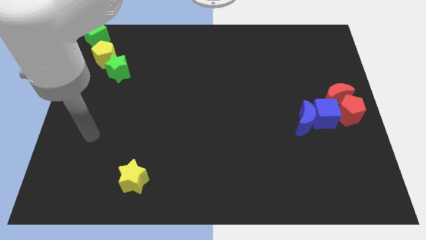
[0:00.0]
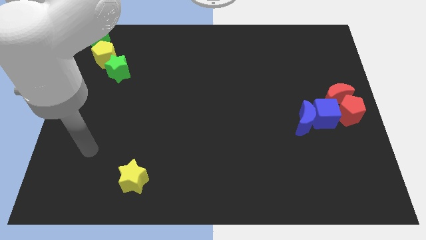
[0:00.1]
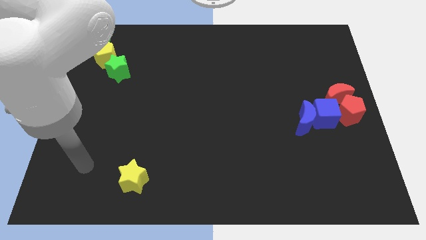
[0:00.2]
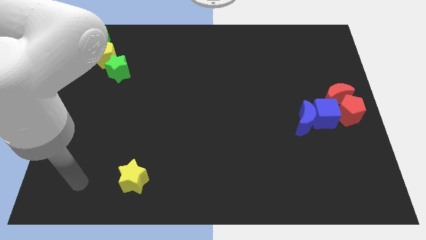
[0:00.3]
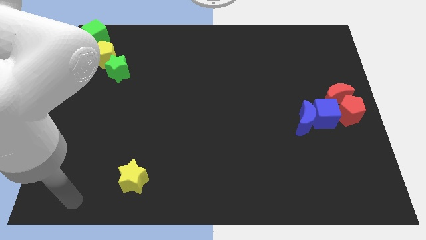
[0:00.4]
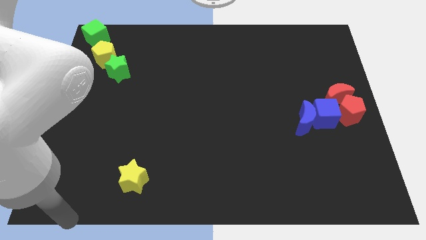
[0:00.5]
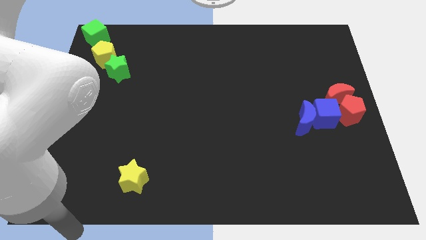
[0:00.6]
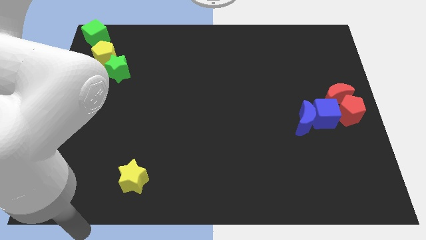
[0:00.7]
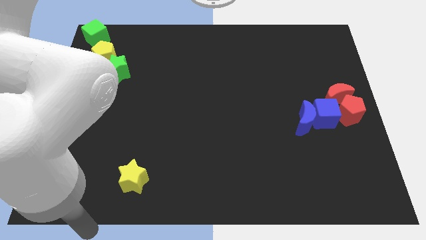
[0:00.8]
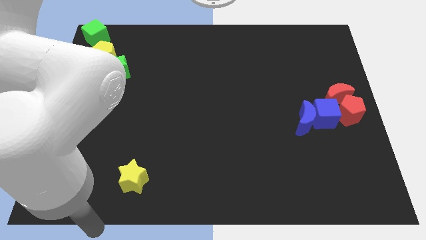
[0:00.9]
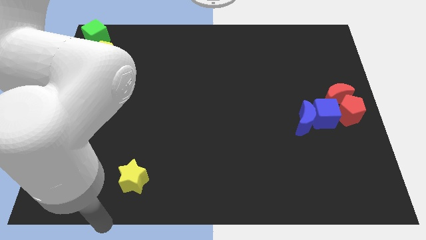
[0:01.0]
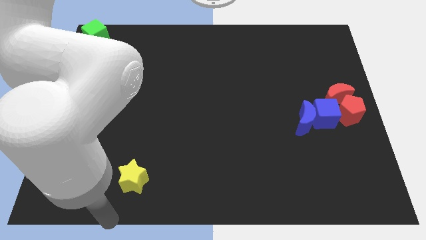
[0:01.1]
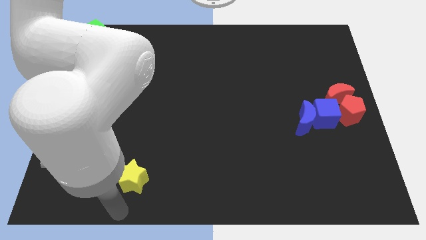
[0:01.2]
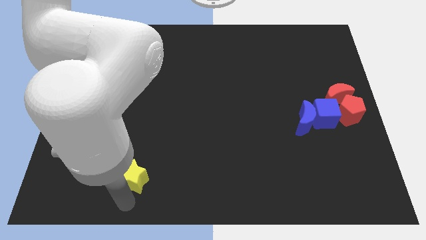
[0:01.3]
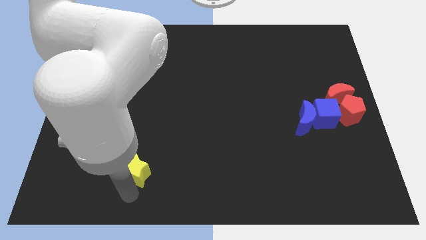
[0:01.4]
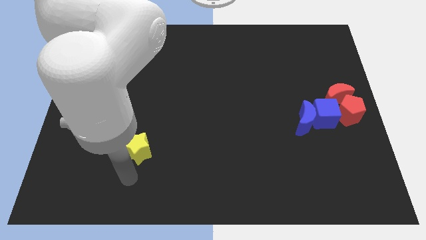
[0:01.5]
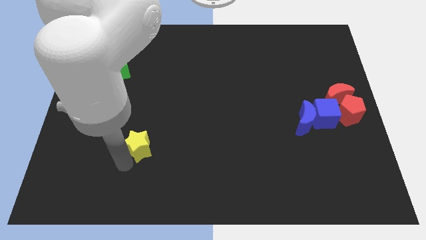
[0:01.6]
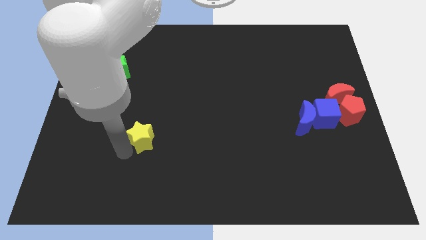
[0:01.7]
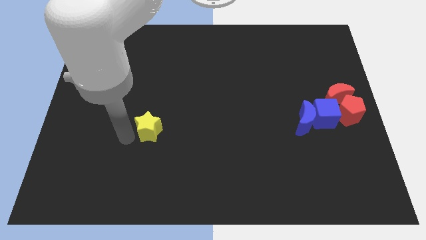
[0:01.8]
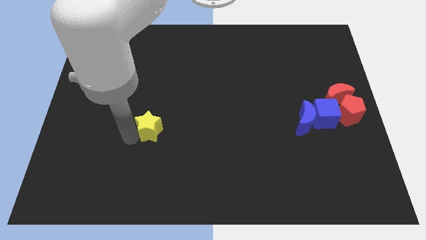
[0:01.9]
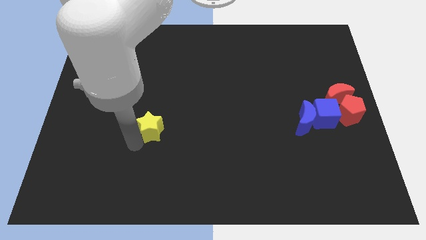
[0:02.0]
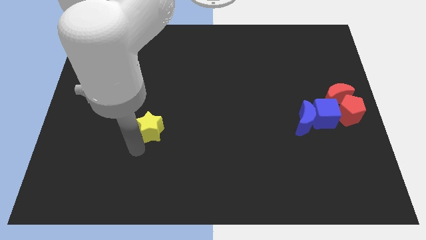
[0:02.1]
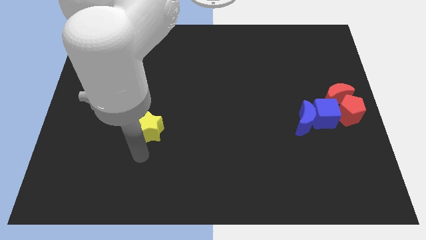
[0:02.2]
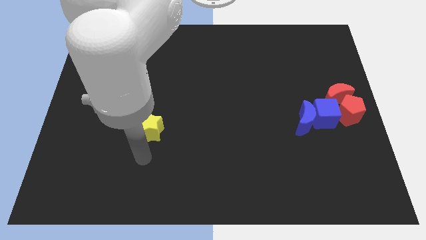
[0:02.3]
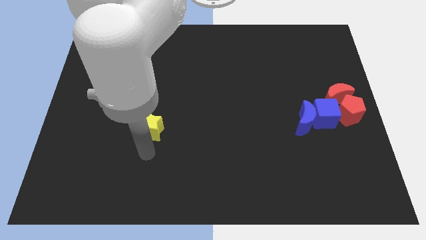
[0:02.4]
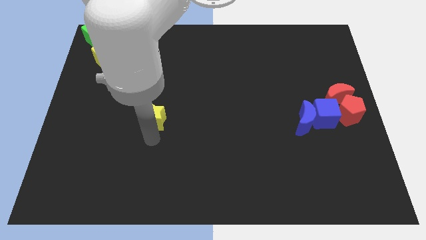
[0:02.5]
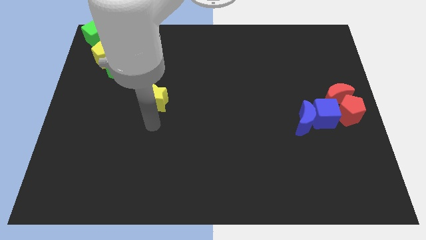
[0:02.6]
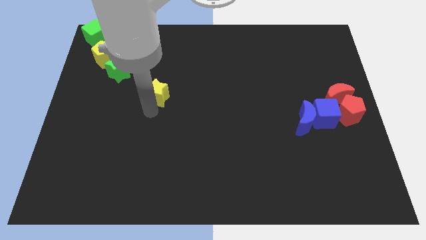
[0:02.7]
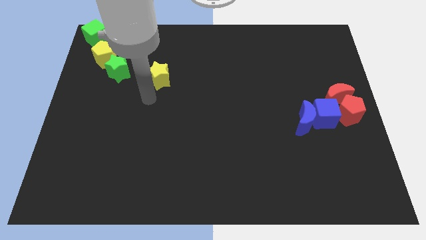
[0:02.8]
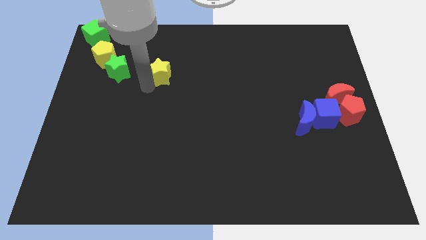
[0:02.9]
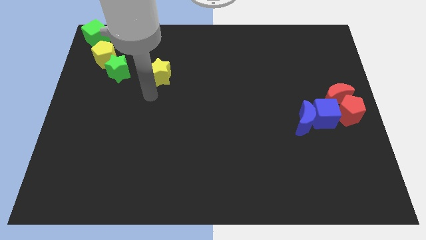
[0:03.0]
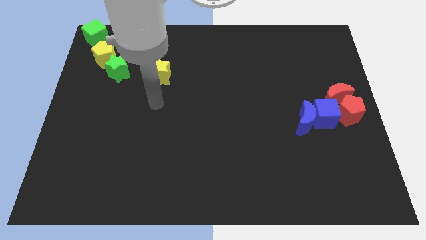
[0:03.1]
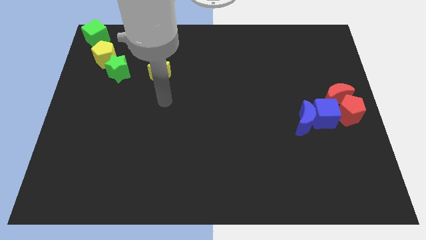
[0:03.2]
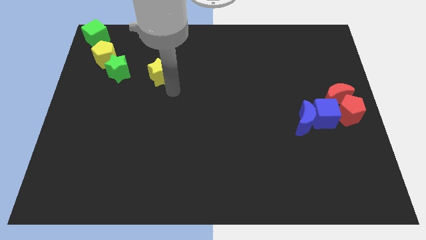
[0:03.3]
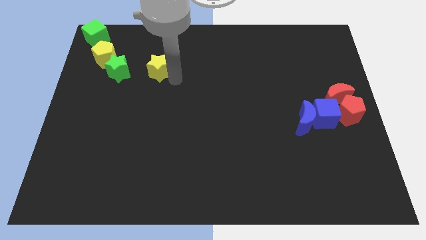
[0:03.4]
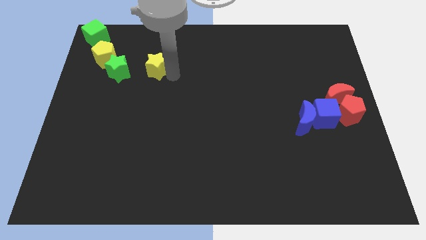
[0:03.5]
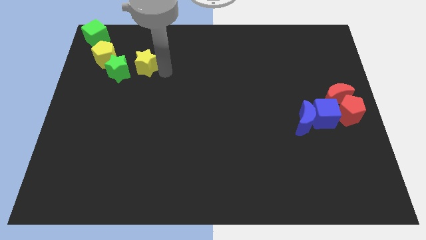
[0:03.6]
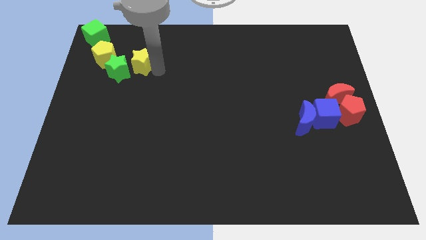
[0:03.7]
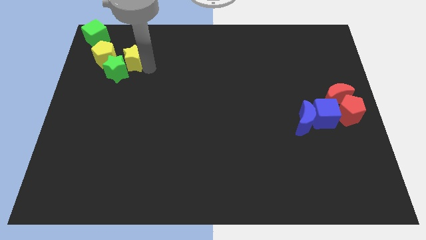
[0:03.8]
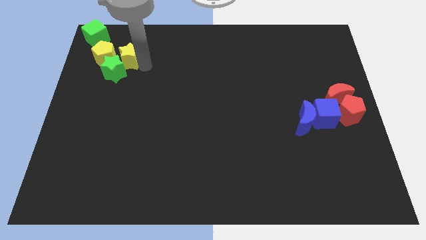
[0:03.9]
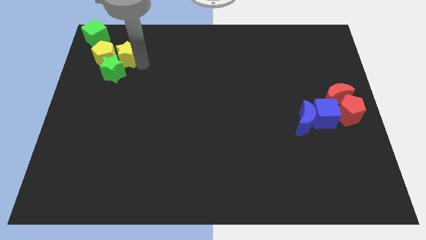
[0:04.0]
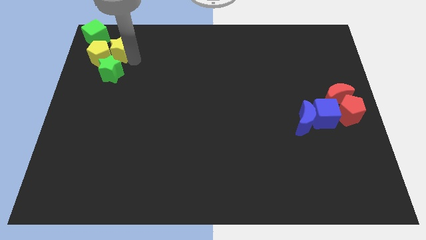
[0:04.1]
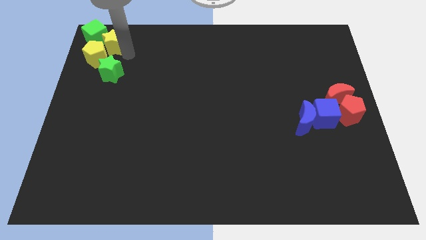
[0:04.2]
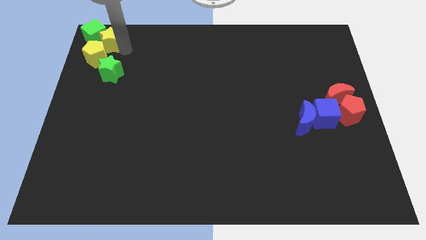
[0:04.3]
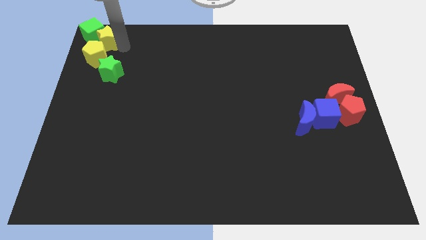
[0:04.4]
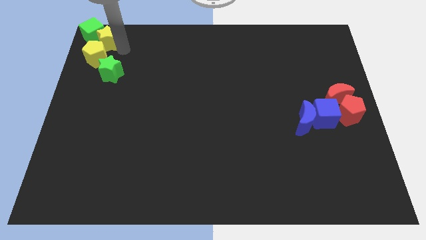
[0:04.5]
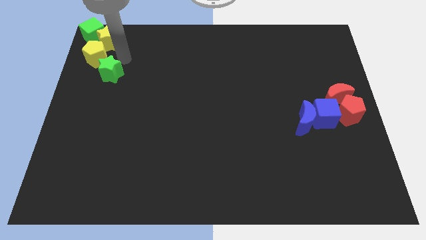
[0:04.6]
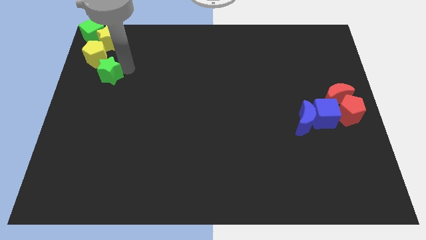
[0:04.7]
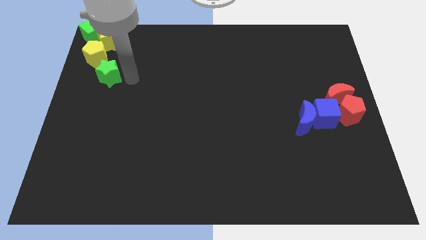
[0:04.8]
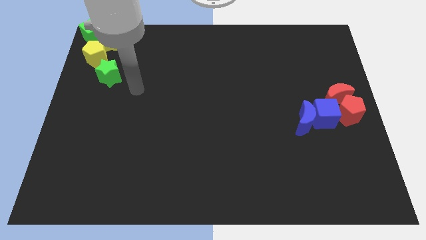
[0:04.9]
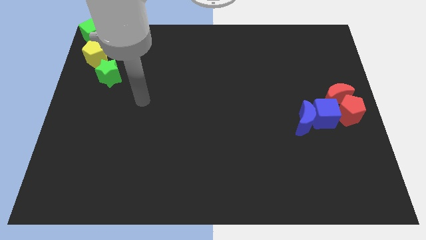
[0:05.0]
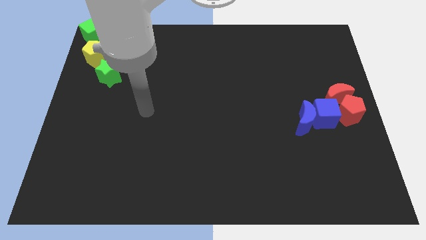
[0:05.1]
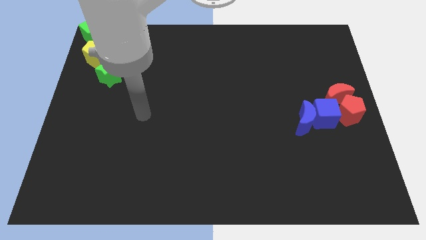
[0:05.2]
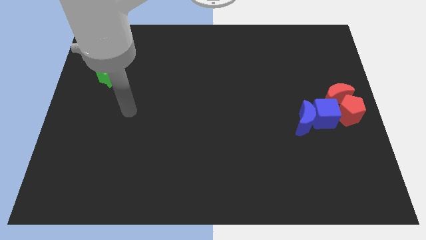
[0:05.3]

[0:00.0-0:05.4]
push the yellow star into the green cube

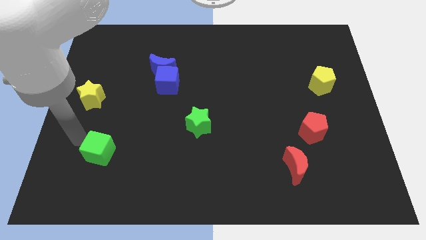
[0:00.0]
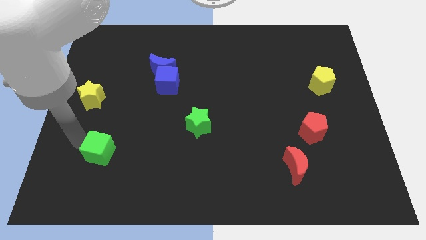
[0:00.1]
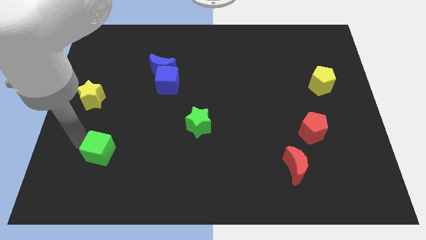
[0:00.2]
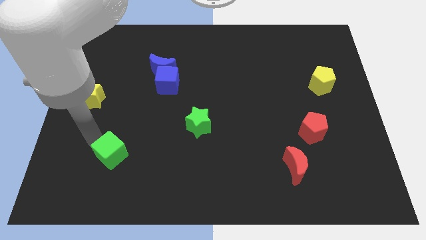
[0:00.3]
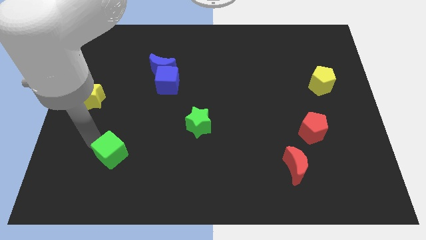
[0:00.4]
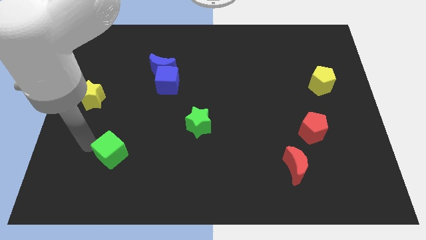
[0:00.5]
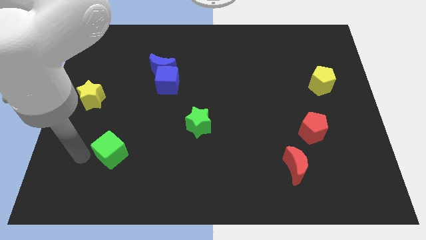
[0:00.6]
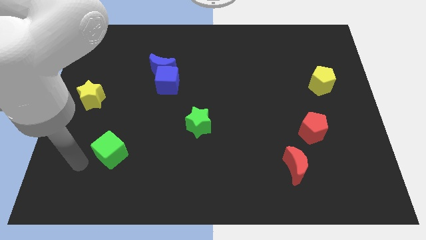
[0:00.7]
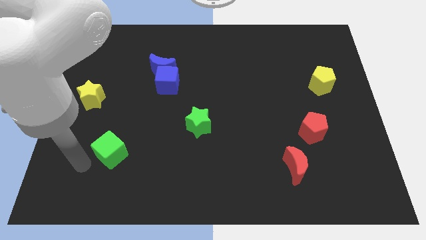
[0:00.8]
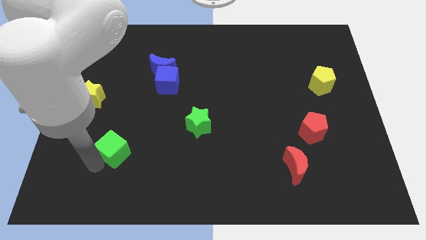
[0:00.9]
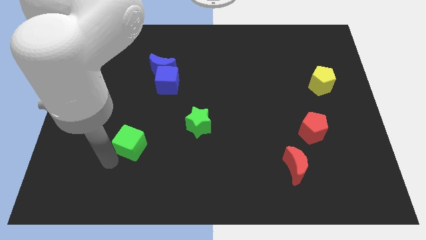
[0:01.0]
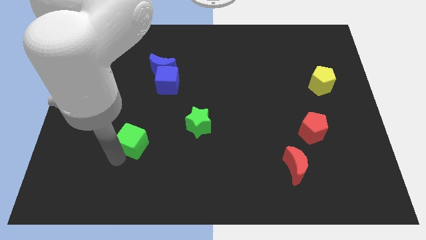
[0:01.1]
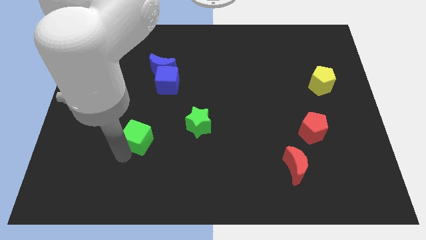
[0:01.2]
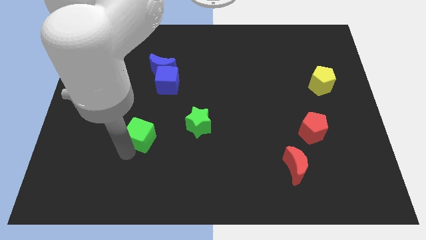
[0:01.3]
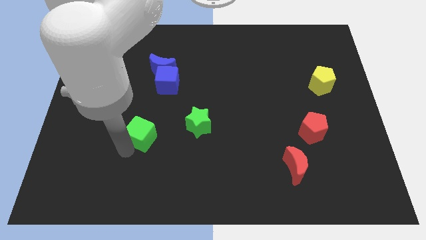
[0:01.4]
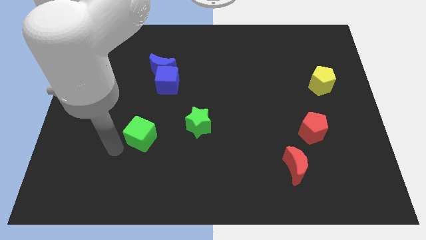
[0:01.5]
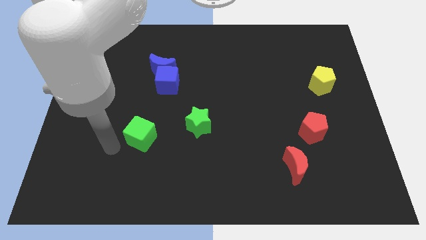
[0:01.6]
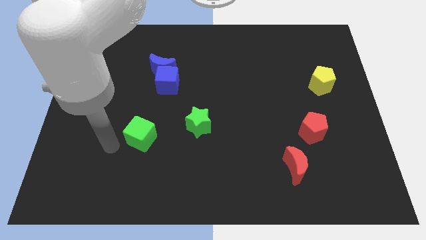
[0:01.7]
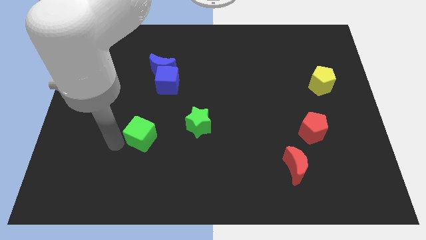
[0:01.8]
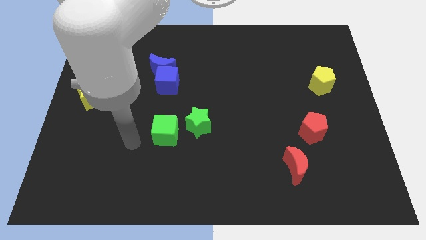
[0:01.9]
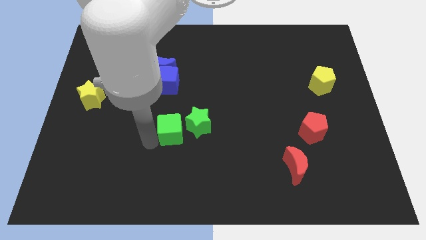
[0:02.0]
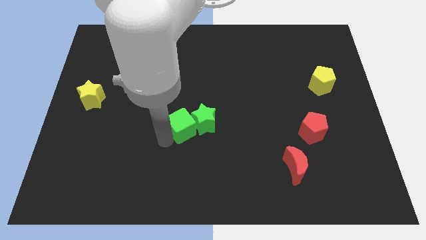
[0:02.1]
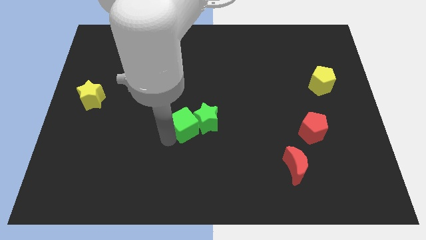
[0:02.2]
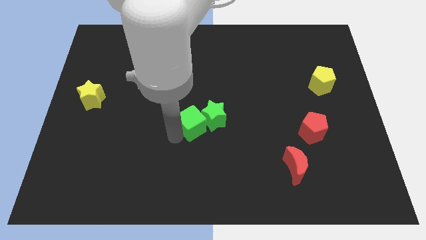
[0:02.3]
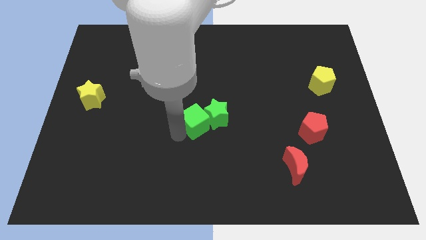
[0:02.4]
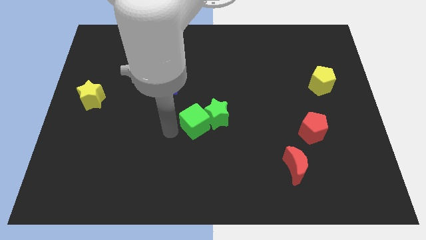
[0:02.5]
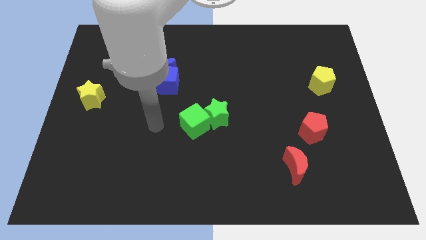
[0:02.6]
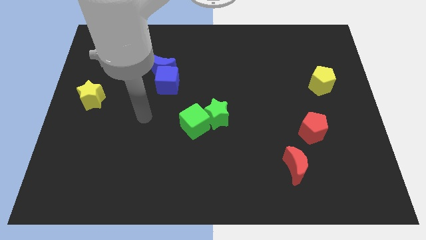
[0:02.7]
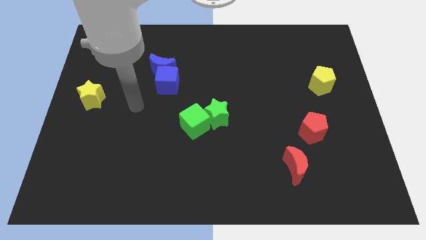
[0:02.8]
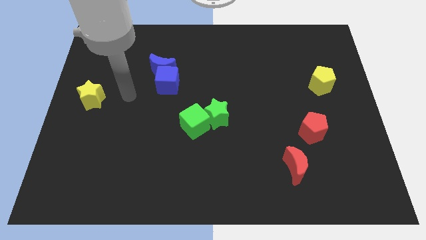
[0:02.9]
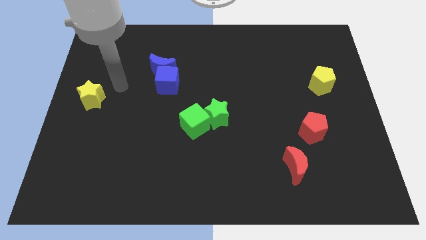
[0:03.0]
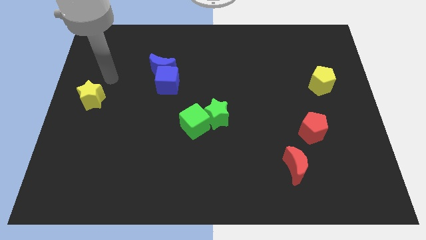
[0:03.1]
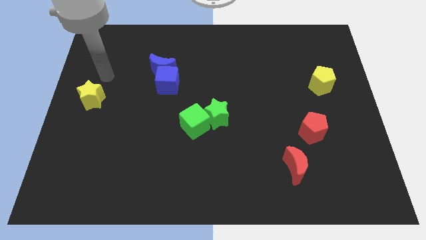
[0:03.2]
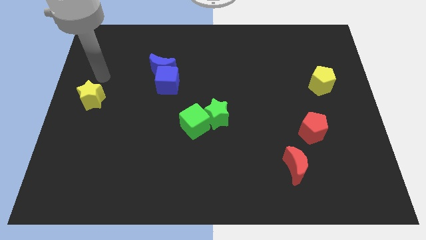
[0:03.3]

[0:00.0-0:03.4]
push the green cube into the green star
